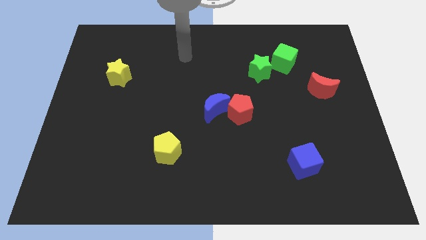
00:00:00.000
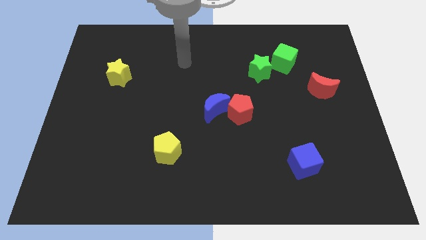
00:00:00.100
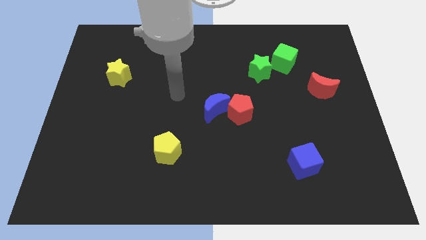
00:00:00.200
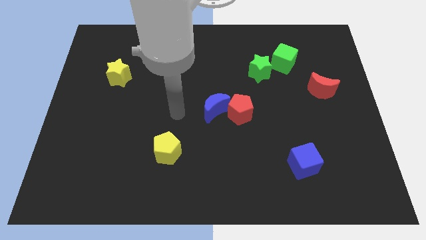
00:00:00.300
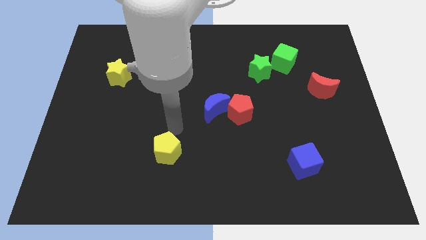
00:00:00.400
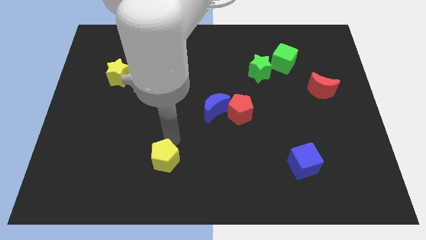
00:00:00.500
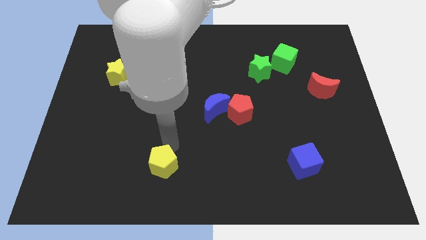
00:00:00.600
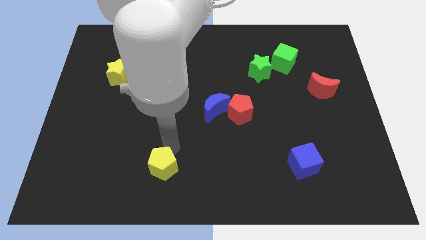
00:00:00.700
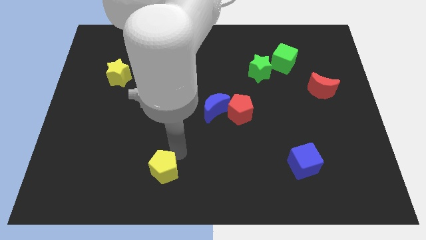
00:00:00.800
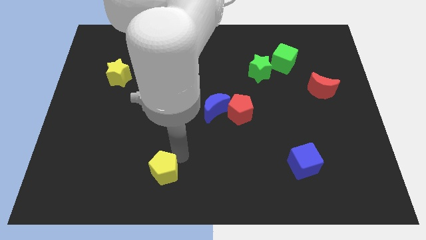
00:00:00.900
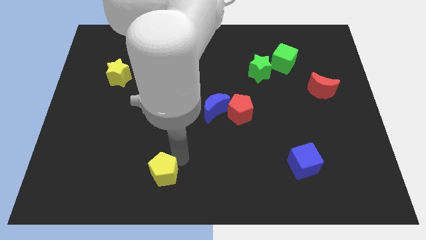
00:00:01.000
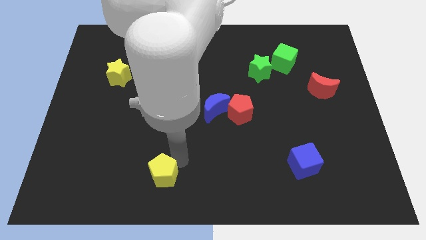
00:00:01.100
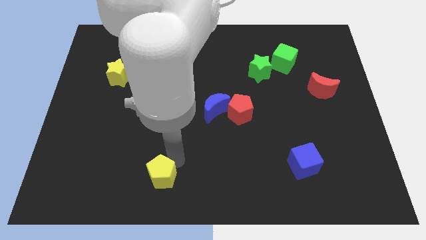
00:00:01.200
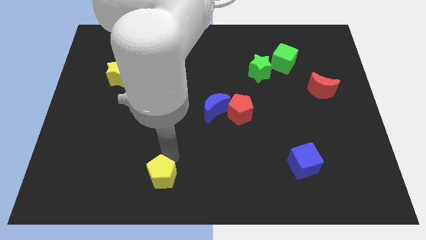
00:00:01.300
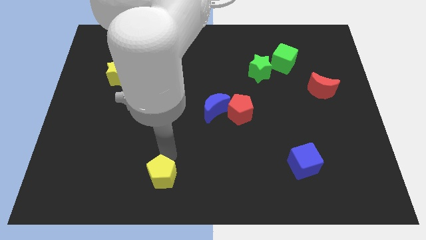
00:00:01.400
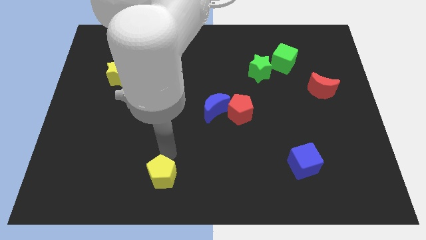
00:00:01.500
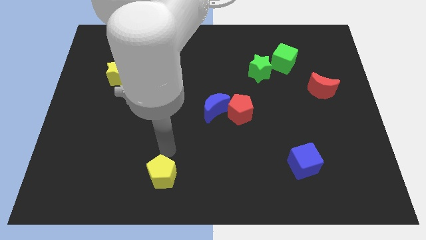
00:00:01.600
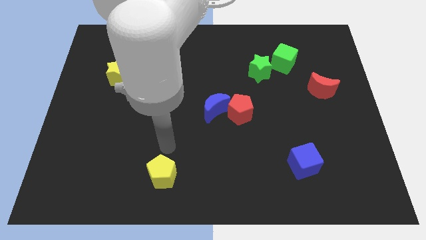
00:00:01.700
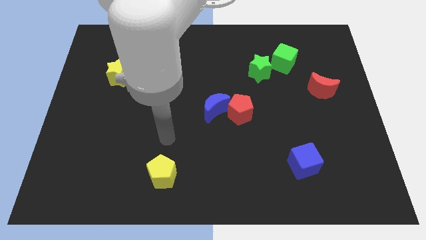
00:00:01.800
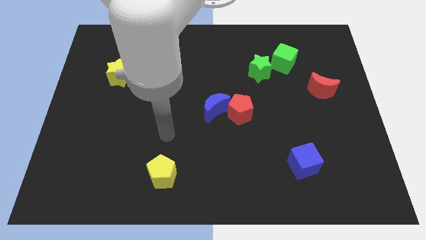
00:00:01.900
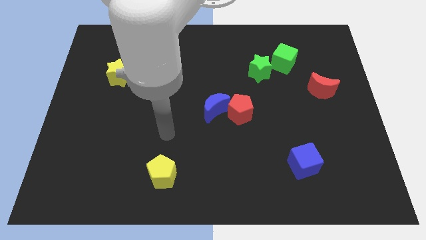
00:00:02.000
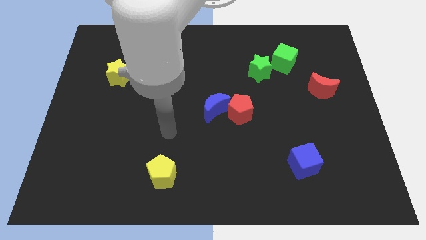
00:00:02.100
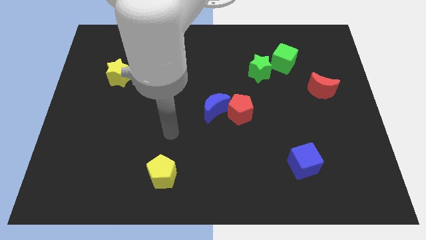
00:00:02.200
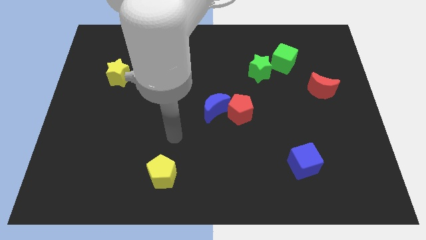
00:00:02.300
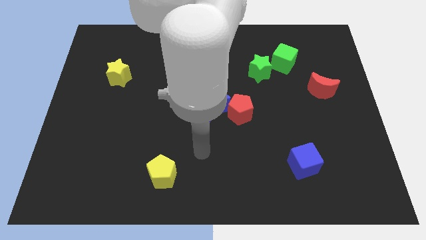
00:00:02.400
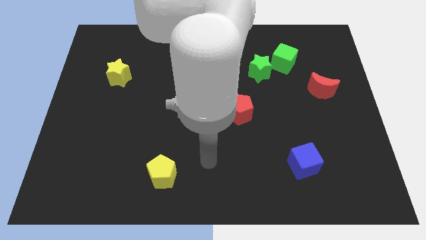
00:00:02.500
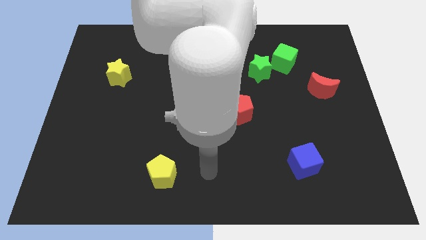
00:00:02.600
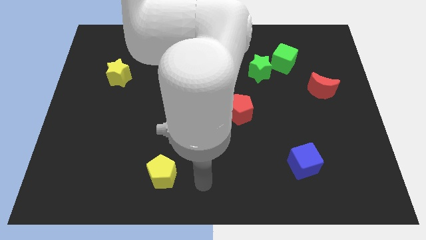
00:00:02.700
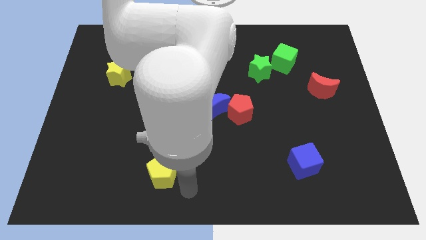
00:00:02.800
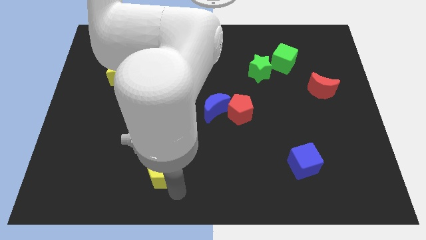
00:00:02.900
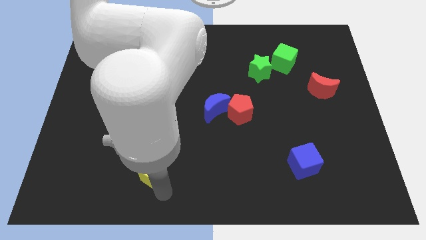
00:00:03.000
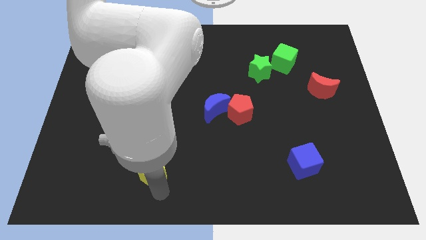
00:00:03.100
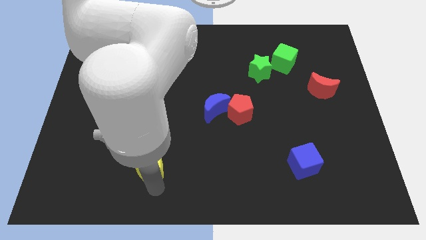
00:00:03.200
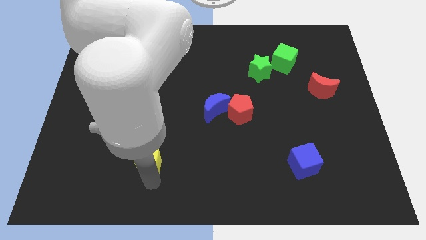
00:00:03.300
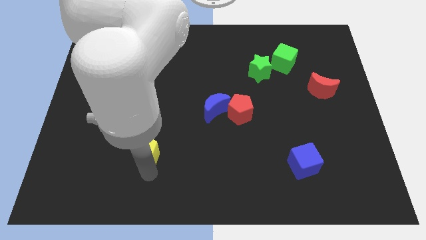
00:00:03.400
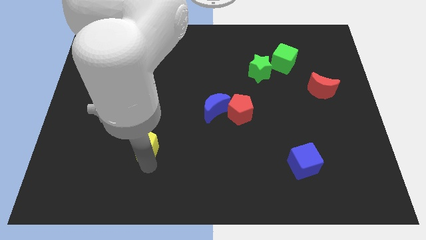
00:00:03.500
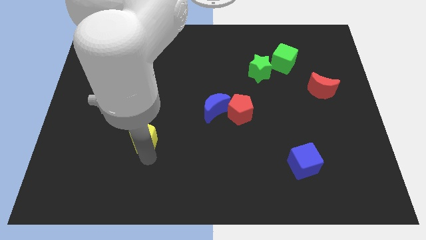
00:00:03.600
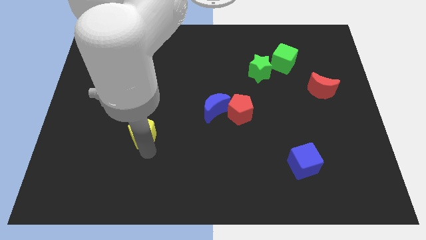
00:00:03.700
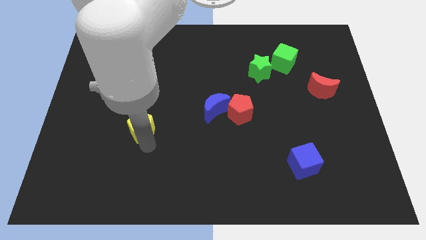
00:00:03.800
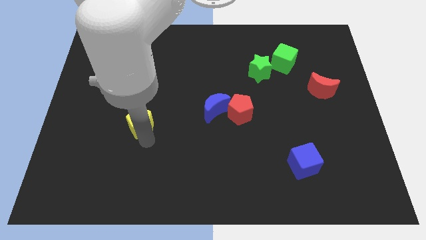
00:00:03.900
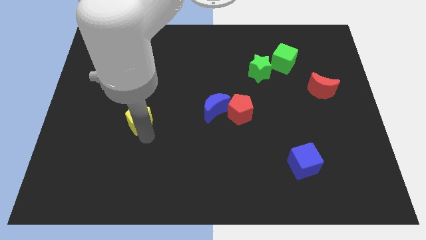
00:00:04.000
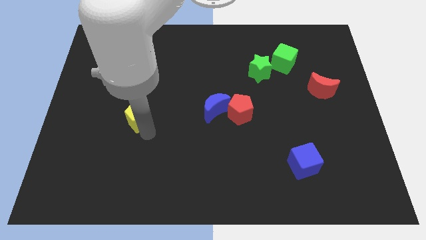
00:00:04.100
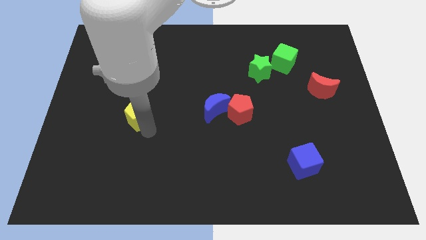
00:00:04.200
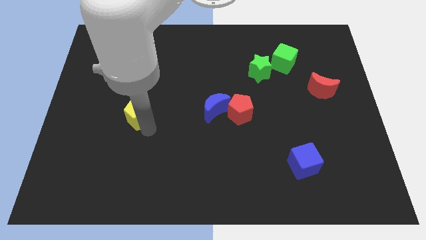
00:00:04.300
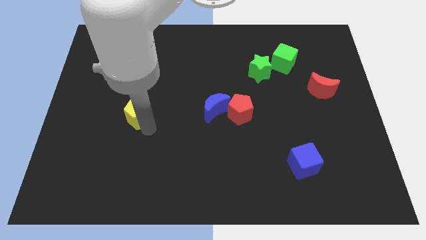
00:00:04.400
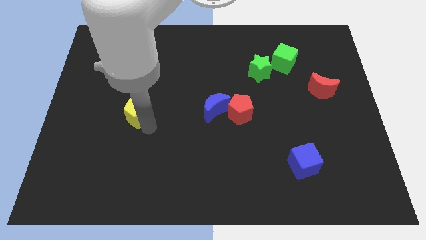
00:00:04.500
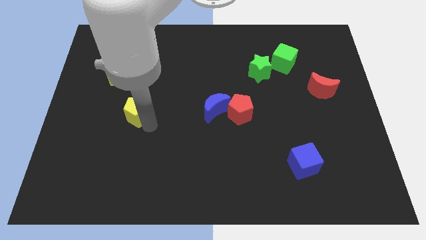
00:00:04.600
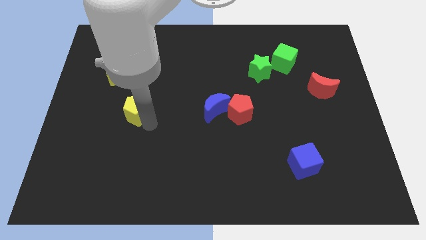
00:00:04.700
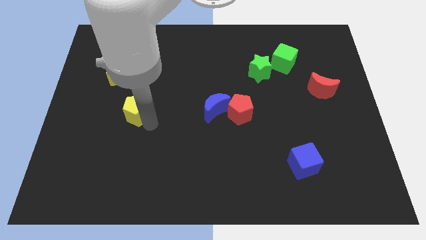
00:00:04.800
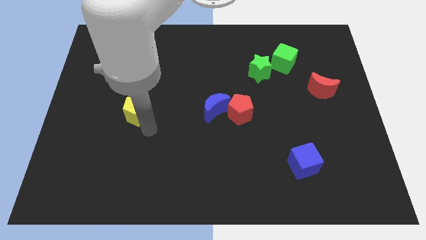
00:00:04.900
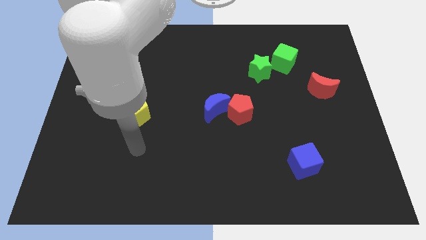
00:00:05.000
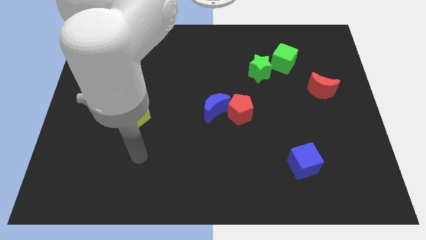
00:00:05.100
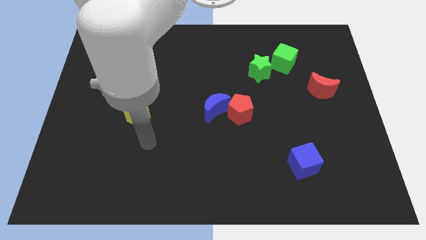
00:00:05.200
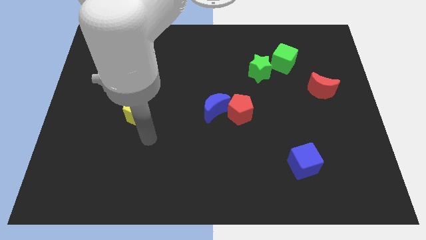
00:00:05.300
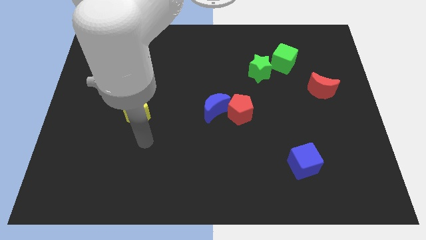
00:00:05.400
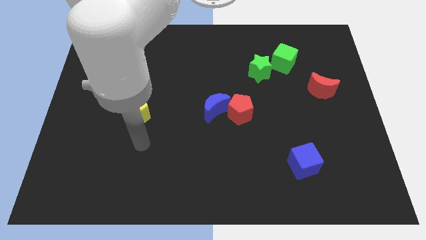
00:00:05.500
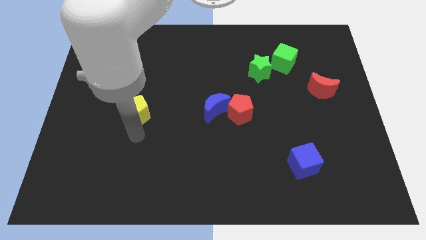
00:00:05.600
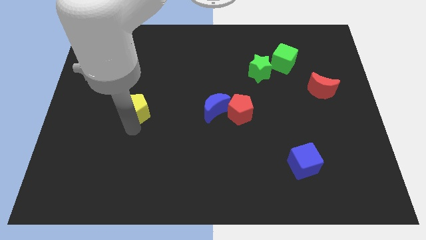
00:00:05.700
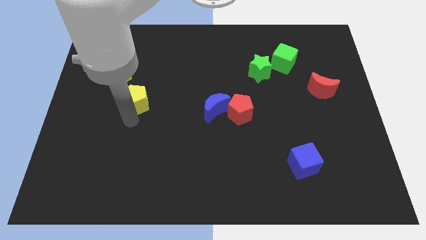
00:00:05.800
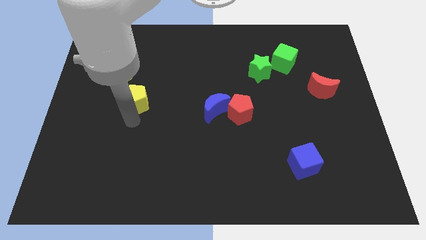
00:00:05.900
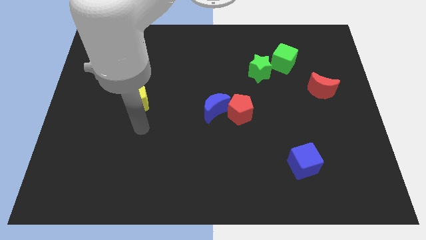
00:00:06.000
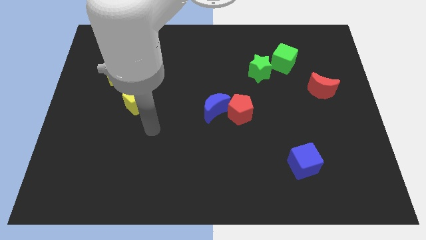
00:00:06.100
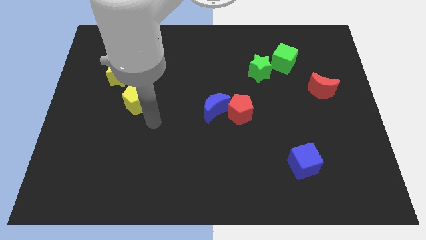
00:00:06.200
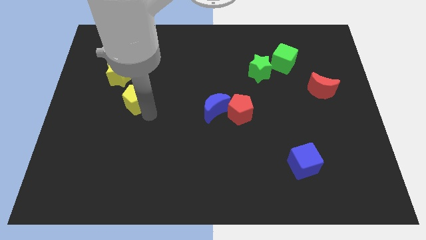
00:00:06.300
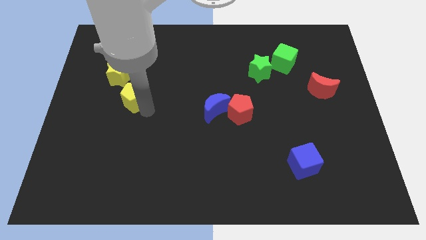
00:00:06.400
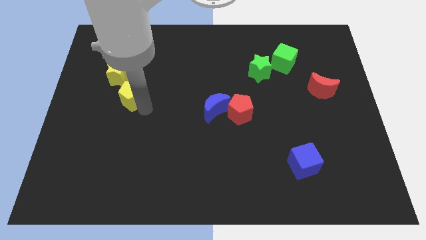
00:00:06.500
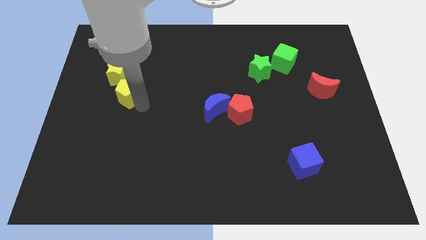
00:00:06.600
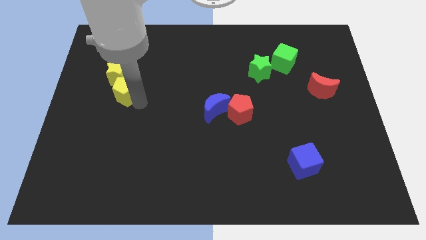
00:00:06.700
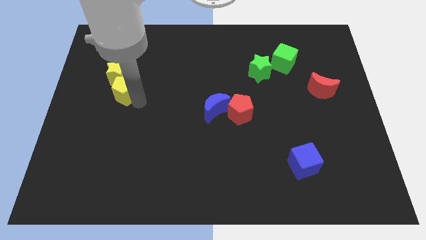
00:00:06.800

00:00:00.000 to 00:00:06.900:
move the yellow pentagon to the yellow star

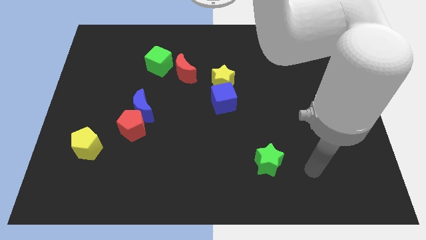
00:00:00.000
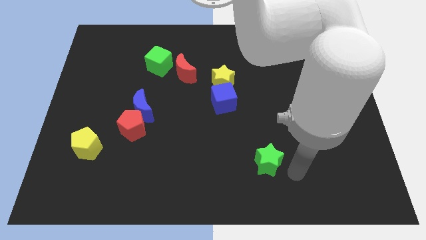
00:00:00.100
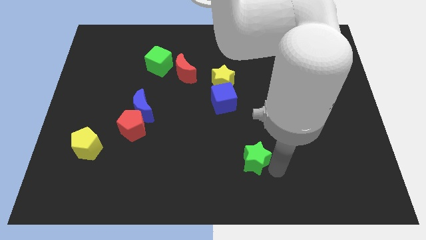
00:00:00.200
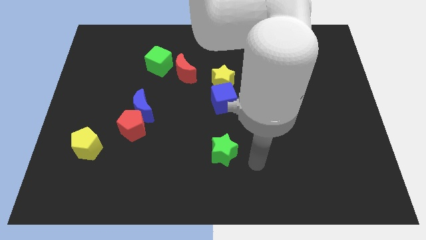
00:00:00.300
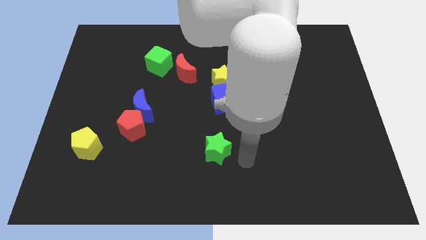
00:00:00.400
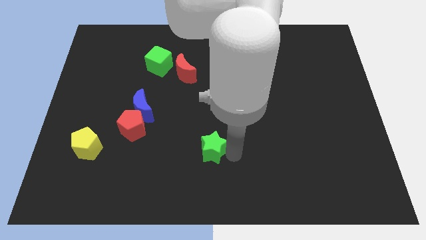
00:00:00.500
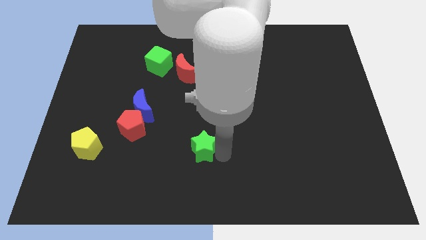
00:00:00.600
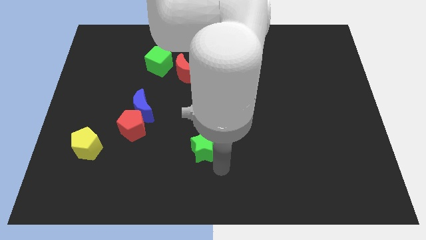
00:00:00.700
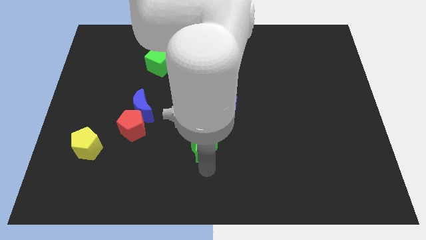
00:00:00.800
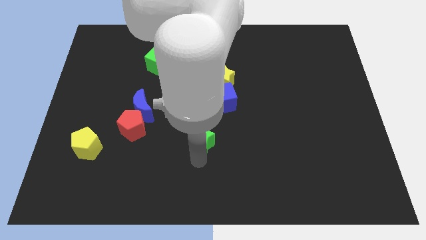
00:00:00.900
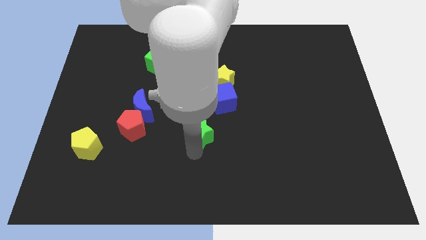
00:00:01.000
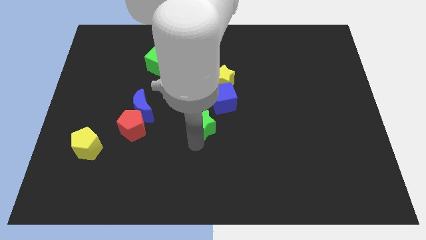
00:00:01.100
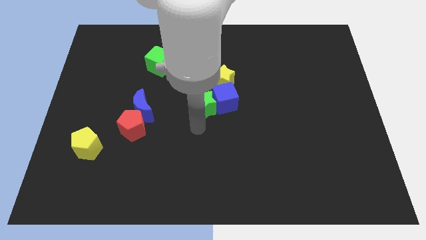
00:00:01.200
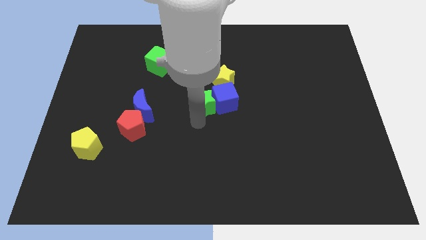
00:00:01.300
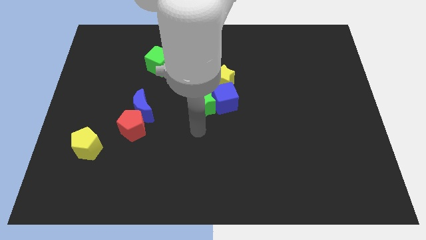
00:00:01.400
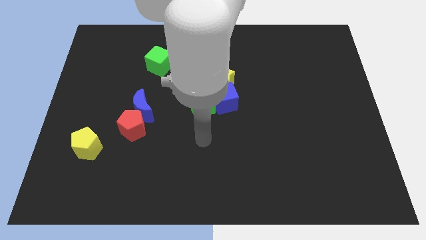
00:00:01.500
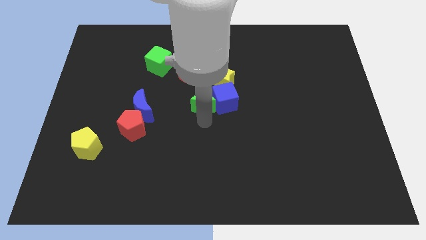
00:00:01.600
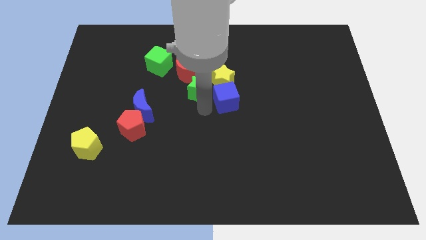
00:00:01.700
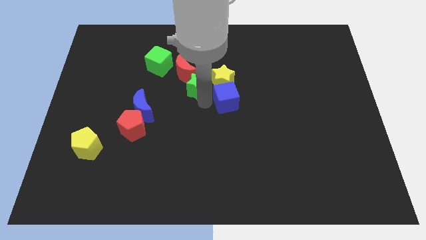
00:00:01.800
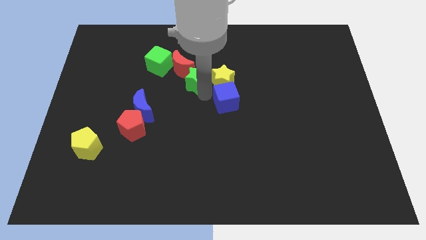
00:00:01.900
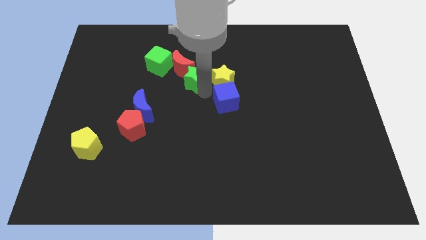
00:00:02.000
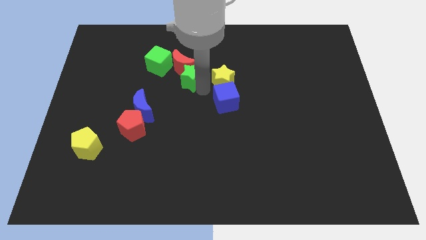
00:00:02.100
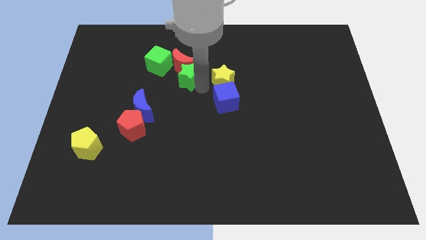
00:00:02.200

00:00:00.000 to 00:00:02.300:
slide the green star towards the red moon
